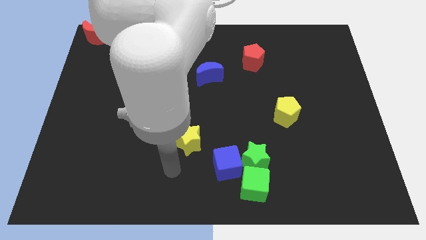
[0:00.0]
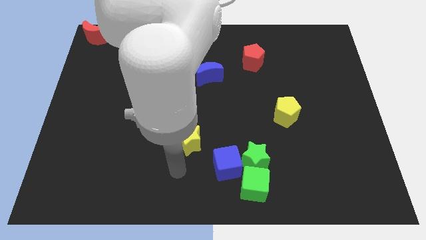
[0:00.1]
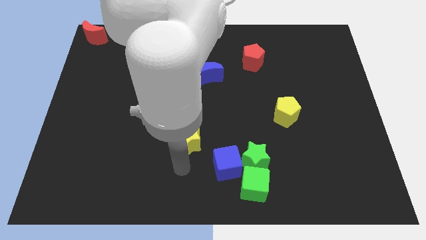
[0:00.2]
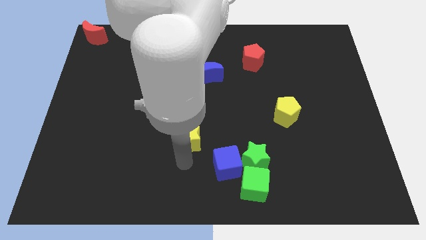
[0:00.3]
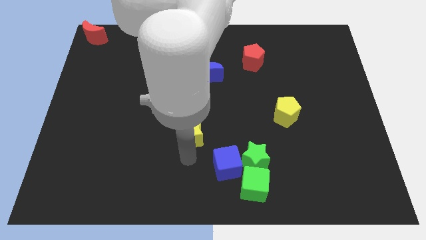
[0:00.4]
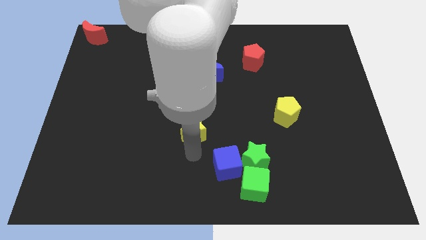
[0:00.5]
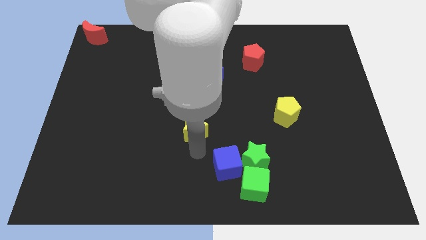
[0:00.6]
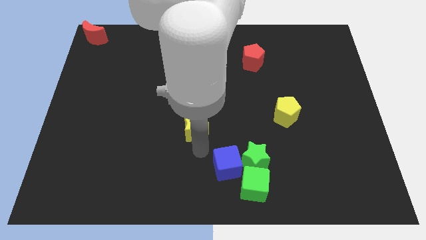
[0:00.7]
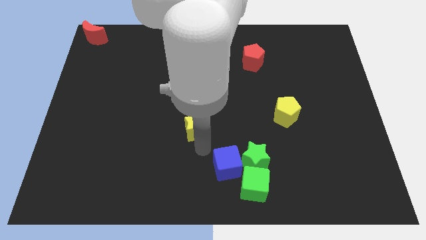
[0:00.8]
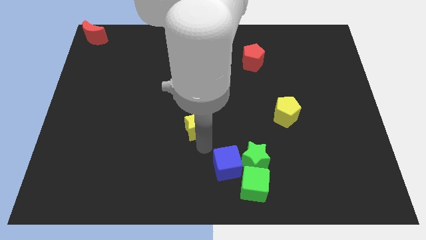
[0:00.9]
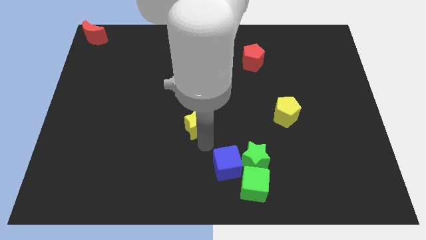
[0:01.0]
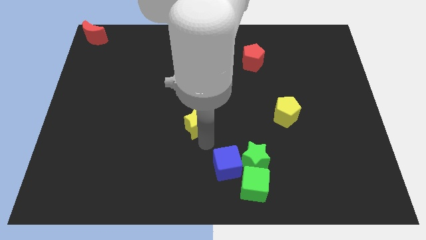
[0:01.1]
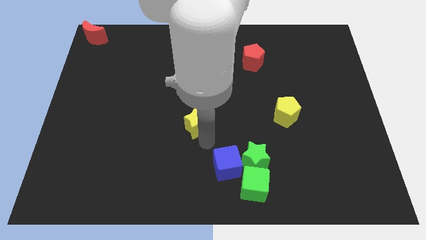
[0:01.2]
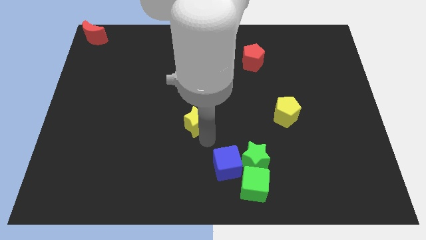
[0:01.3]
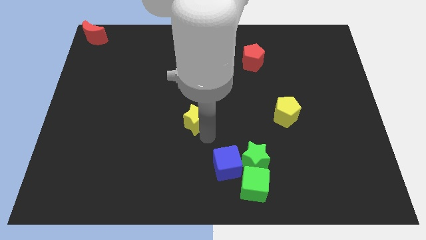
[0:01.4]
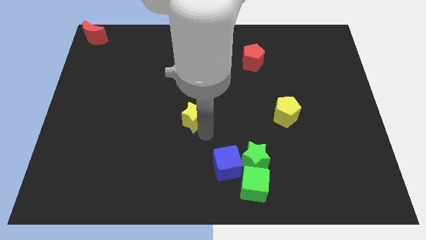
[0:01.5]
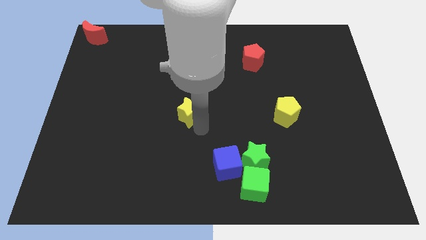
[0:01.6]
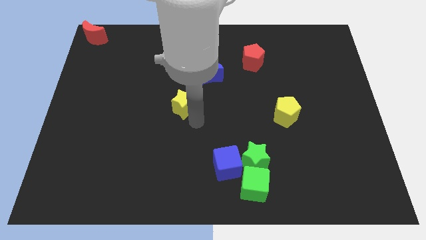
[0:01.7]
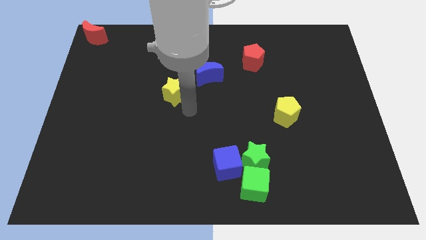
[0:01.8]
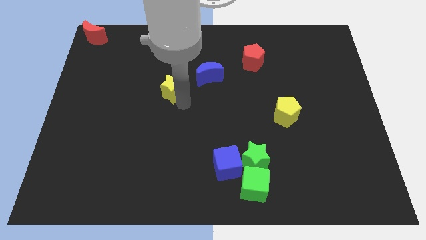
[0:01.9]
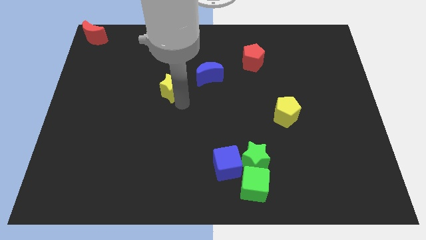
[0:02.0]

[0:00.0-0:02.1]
move yellow star to bottom left of blue moon

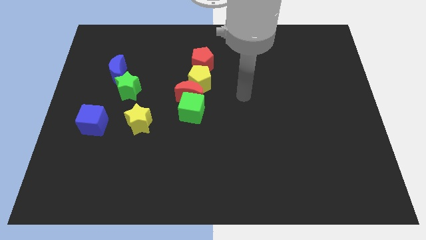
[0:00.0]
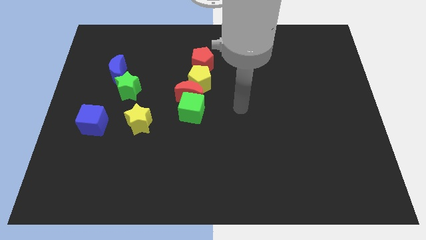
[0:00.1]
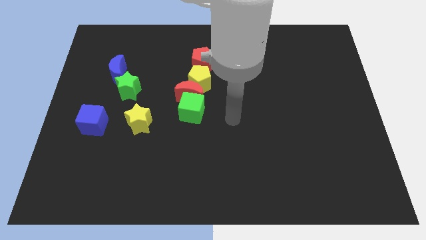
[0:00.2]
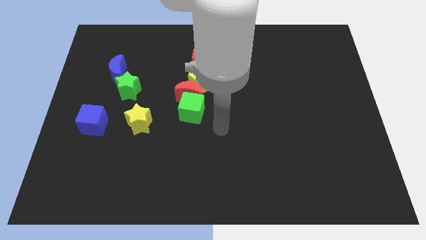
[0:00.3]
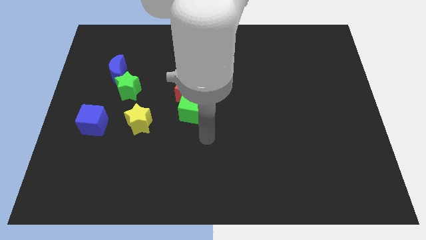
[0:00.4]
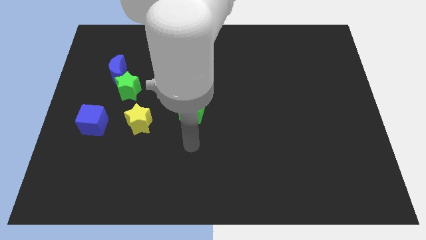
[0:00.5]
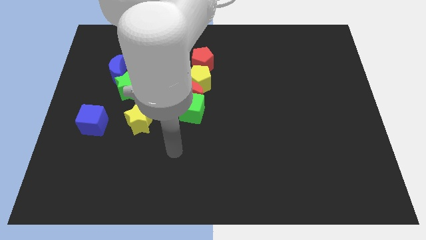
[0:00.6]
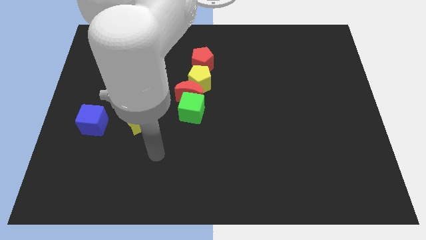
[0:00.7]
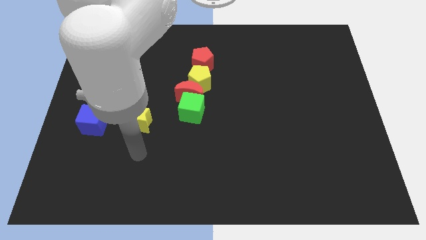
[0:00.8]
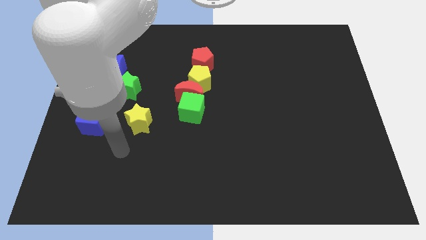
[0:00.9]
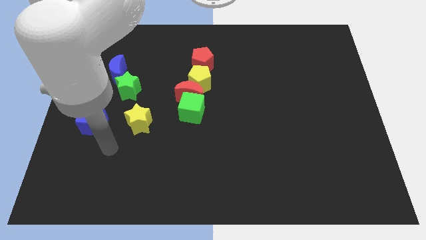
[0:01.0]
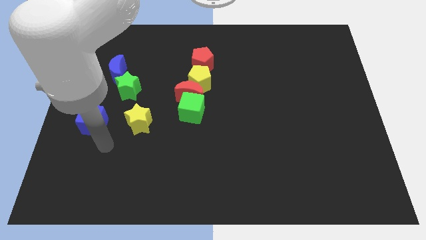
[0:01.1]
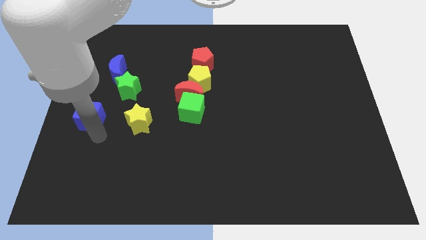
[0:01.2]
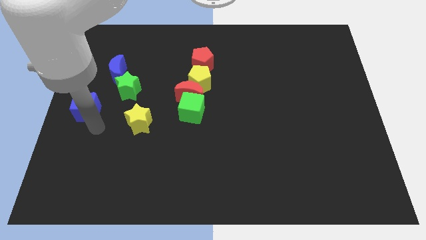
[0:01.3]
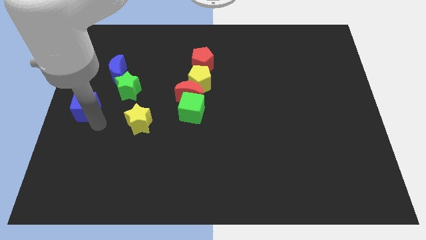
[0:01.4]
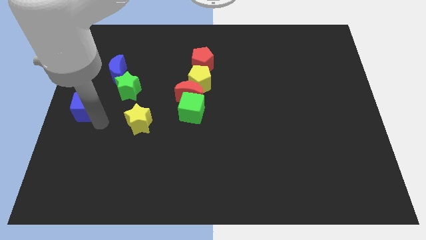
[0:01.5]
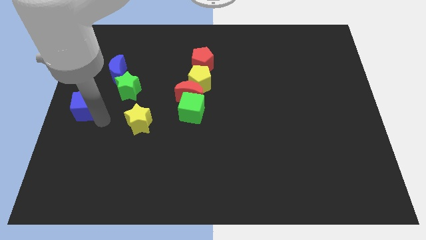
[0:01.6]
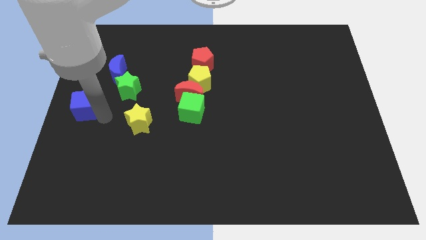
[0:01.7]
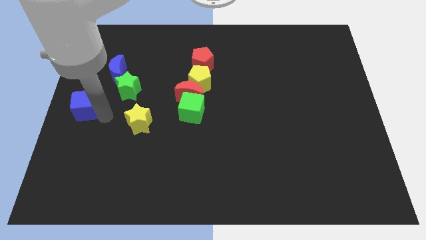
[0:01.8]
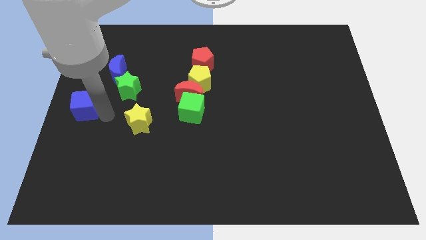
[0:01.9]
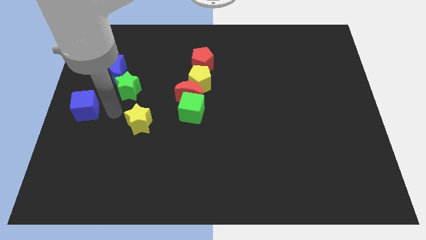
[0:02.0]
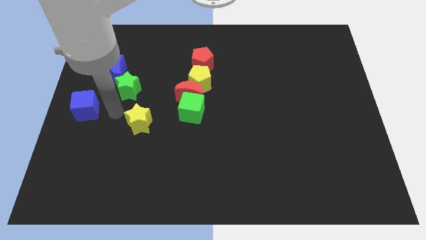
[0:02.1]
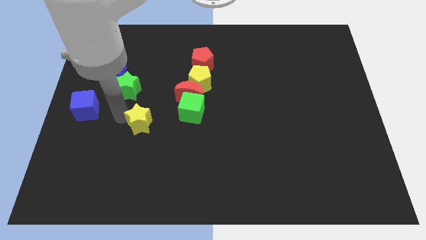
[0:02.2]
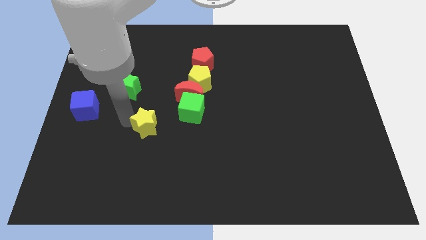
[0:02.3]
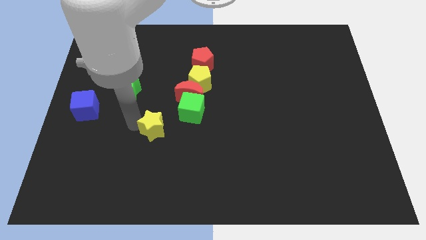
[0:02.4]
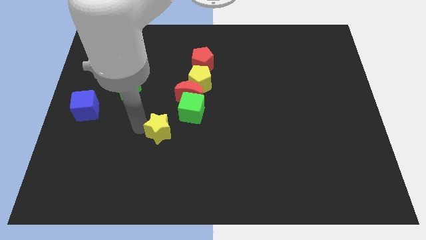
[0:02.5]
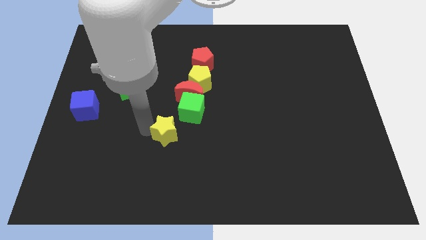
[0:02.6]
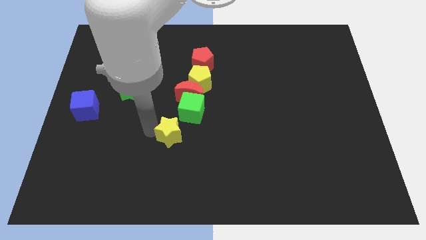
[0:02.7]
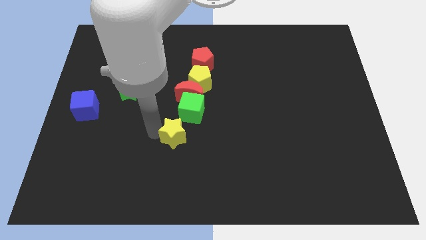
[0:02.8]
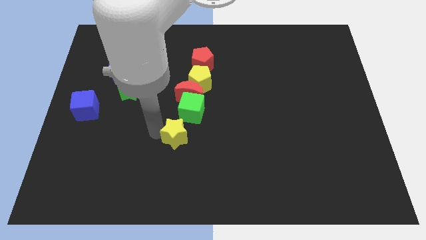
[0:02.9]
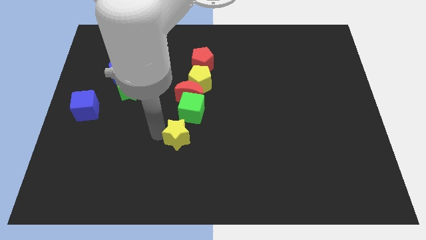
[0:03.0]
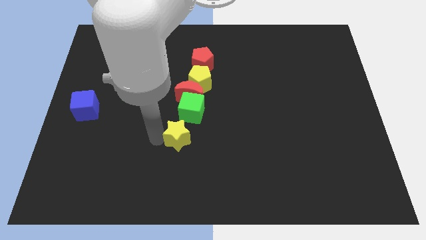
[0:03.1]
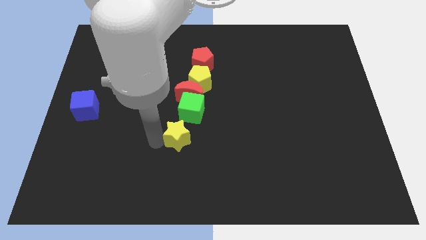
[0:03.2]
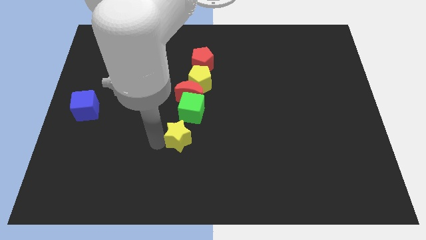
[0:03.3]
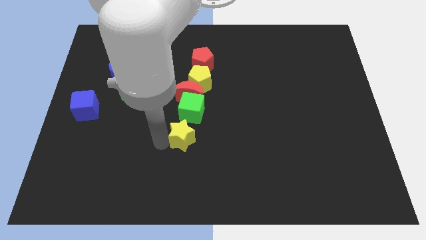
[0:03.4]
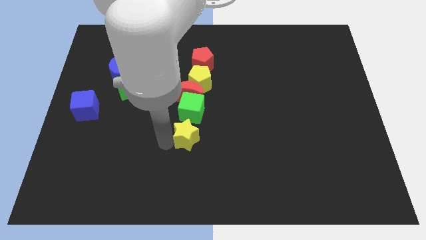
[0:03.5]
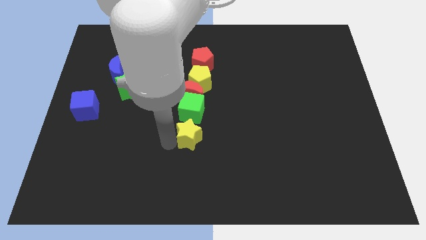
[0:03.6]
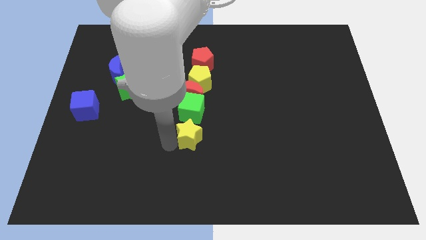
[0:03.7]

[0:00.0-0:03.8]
place yellow star below green cube

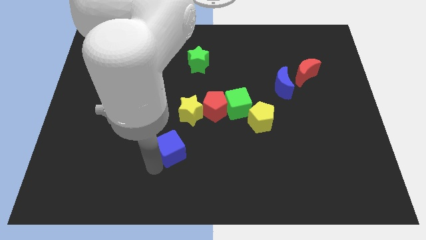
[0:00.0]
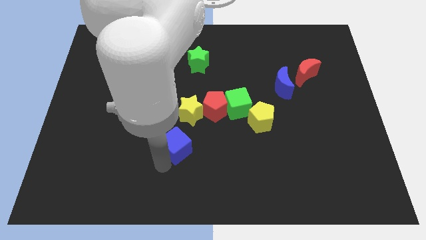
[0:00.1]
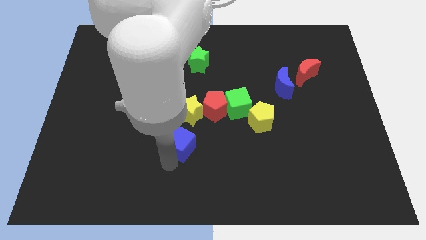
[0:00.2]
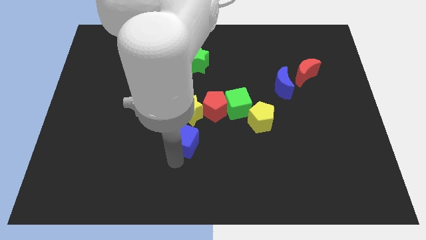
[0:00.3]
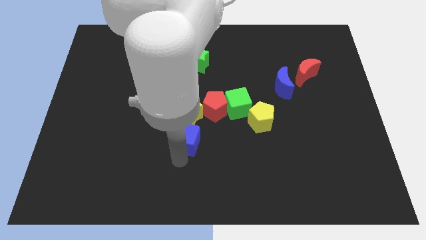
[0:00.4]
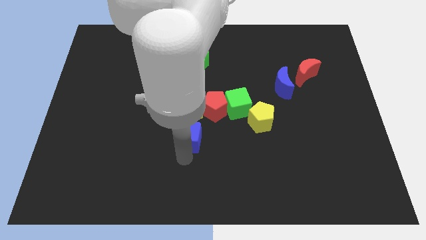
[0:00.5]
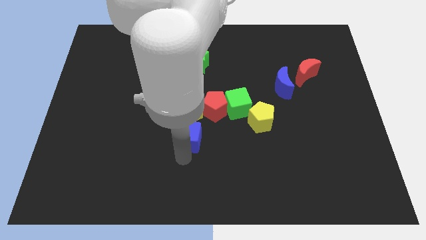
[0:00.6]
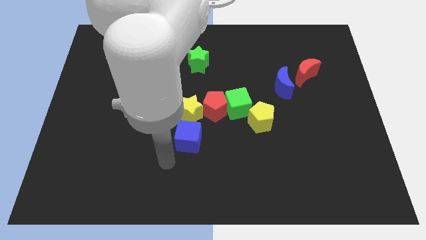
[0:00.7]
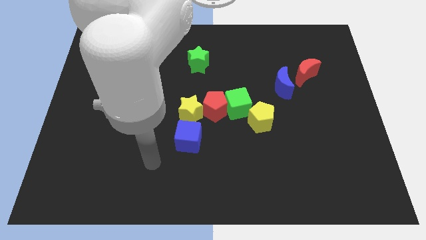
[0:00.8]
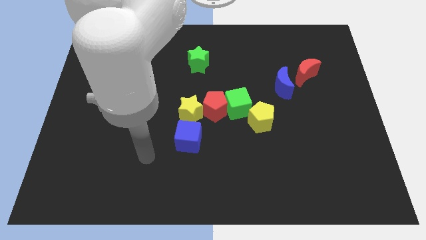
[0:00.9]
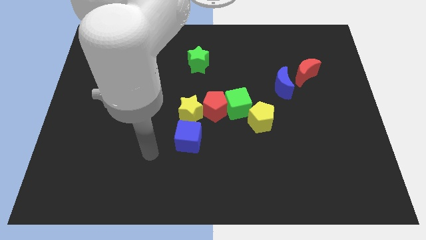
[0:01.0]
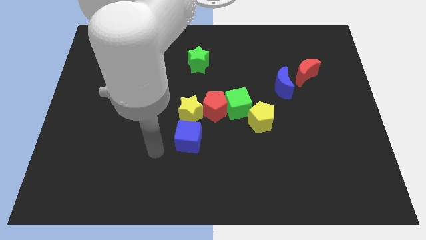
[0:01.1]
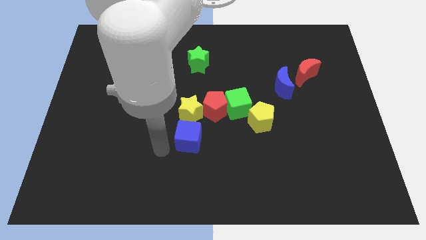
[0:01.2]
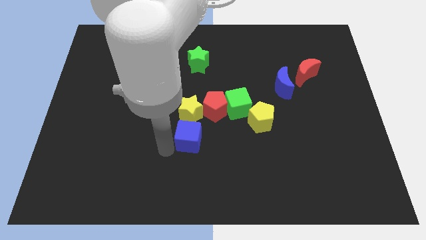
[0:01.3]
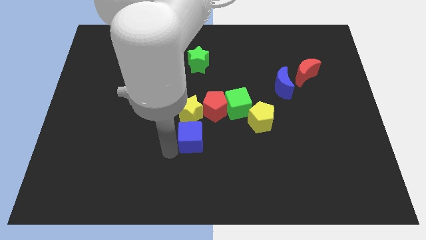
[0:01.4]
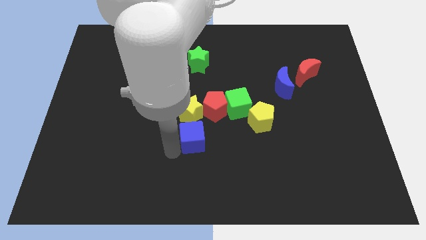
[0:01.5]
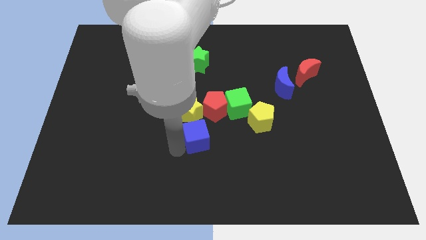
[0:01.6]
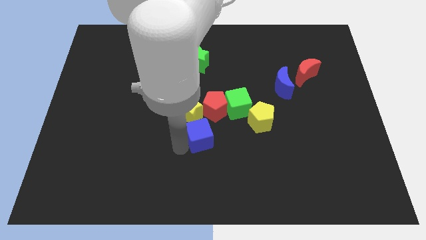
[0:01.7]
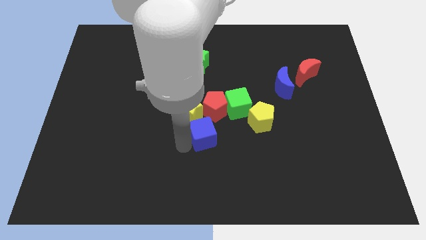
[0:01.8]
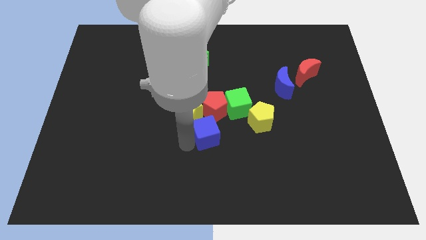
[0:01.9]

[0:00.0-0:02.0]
push the blue cube close to the red pentagon

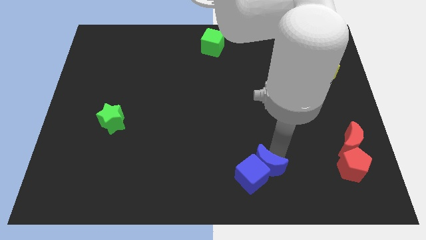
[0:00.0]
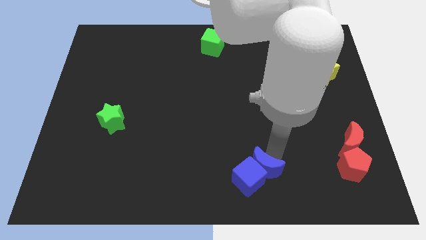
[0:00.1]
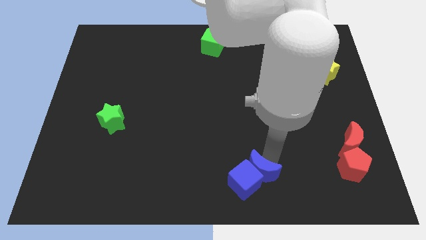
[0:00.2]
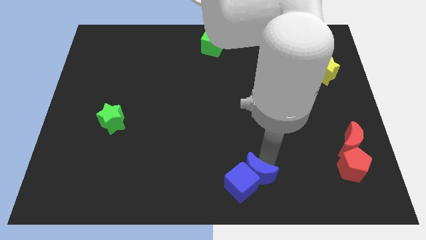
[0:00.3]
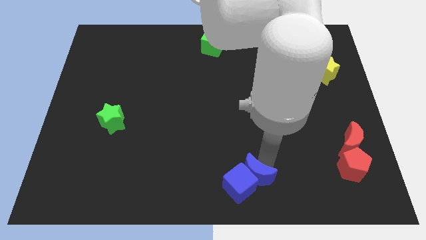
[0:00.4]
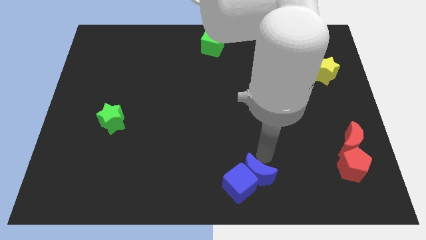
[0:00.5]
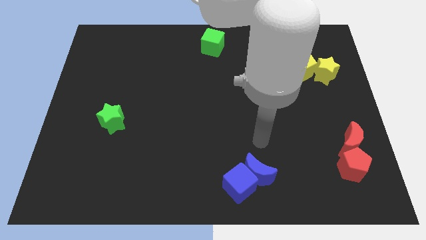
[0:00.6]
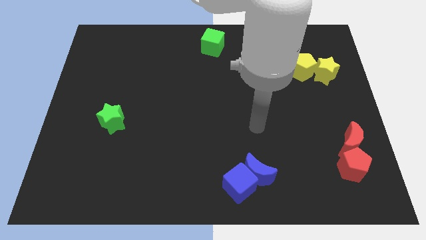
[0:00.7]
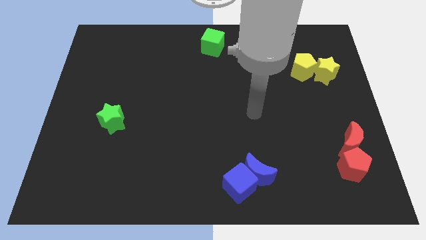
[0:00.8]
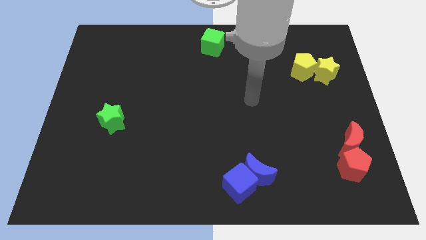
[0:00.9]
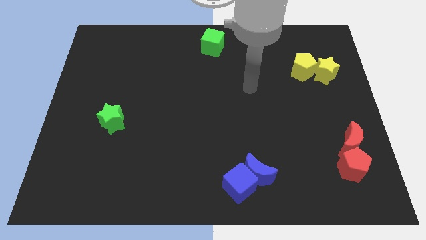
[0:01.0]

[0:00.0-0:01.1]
push blue blocks to the bottom center of the board

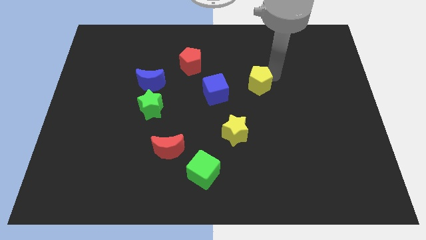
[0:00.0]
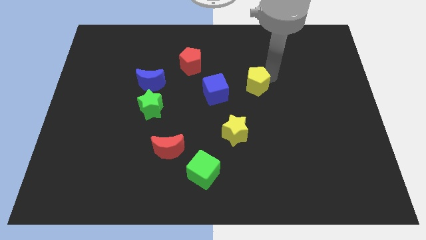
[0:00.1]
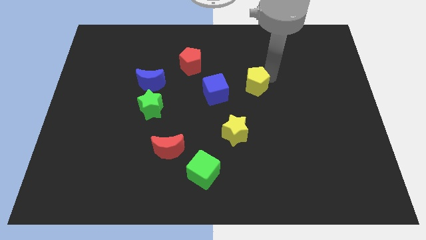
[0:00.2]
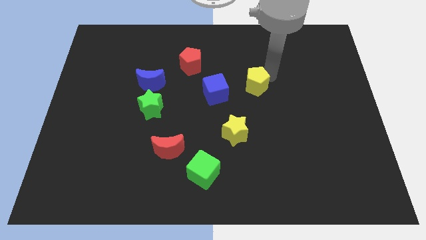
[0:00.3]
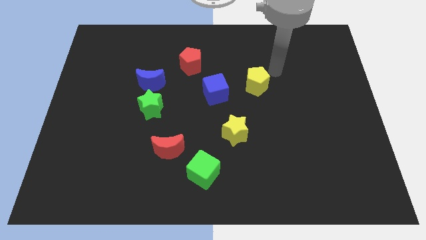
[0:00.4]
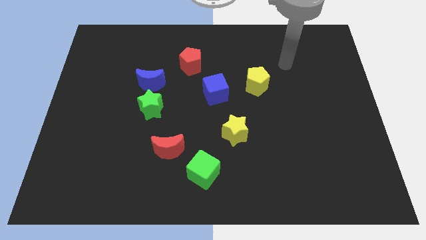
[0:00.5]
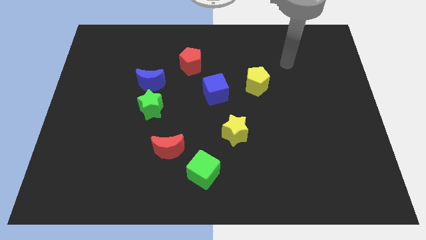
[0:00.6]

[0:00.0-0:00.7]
slide the yellow pentagon diagonally to the yellow star
